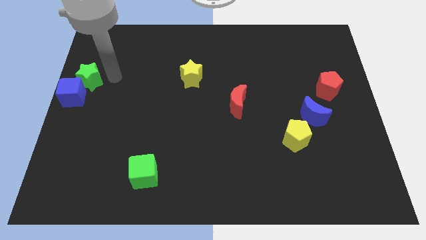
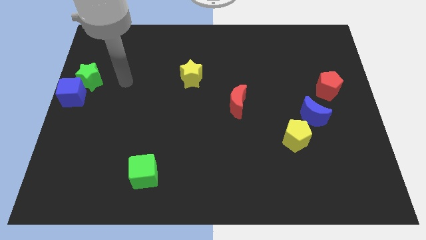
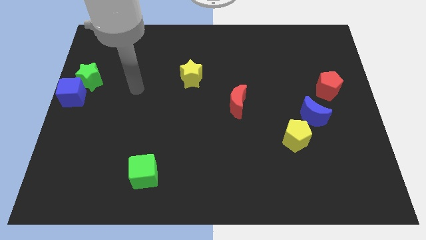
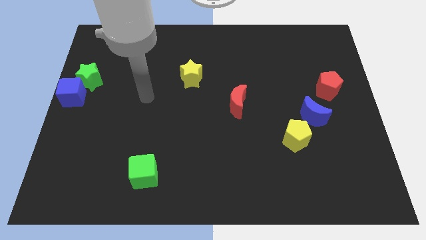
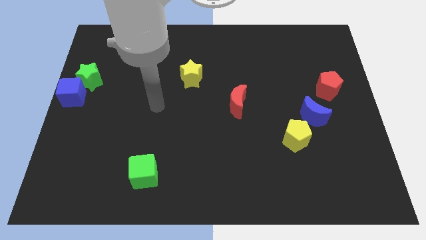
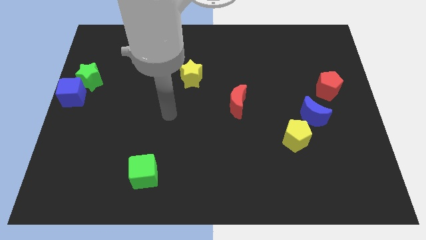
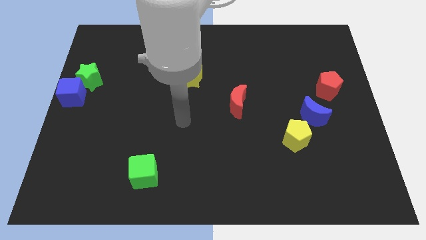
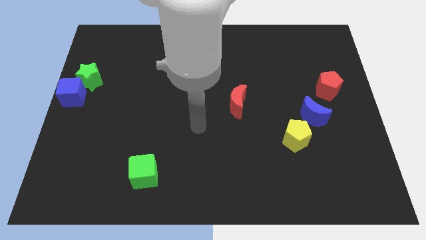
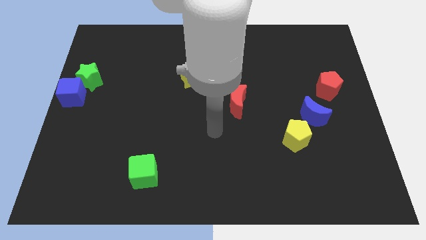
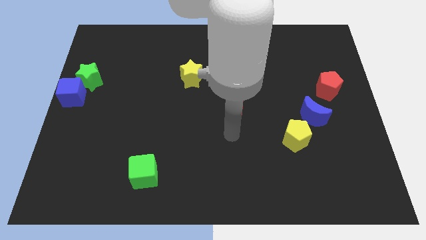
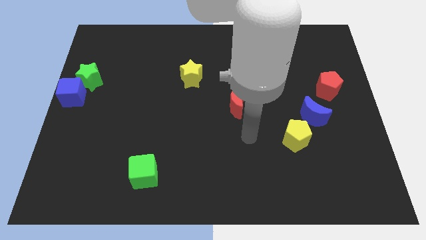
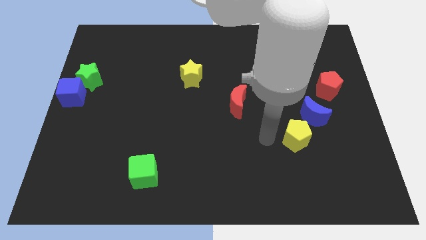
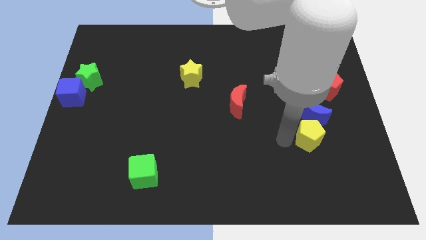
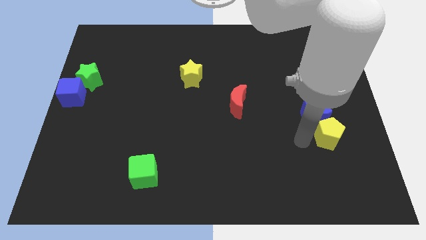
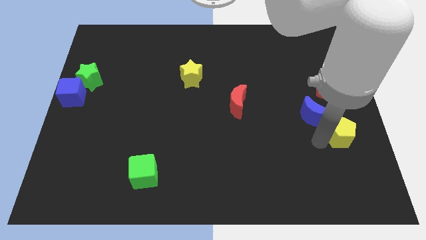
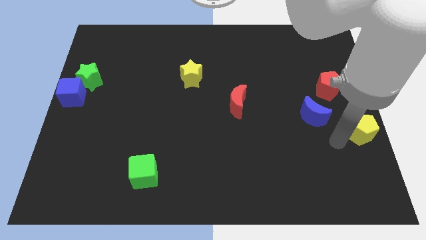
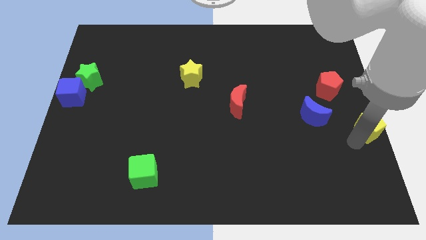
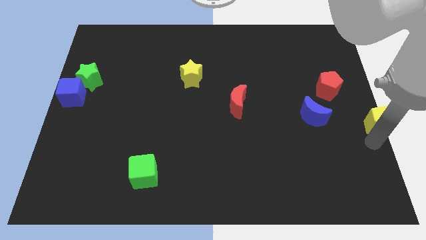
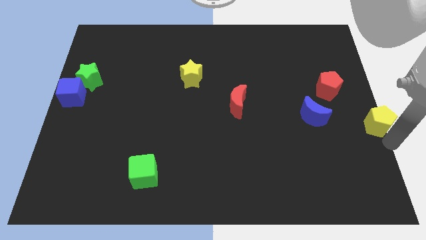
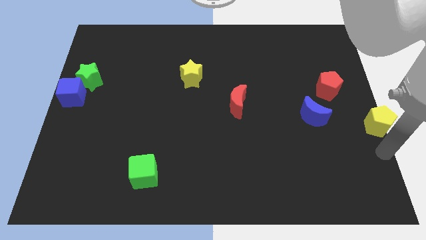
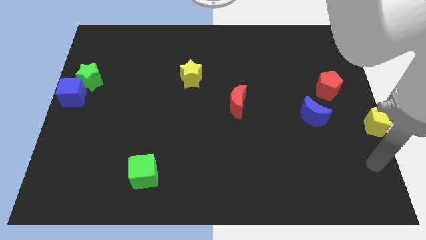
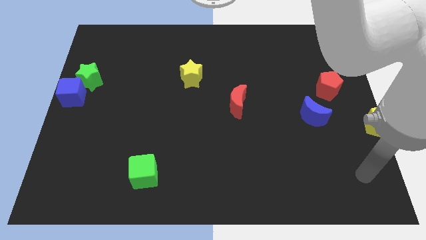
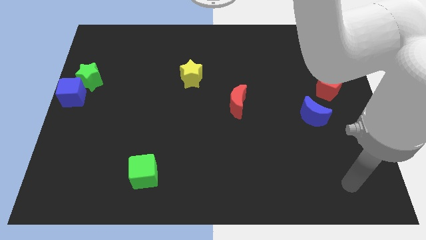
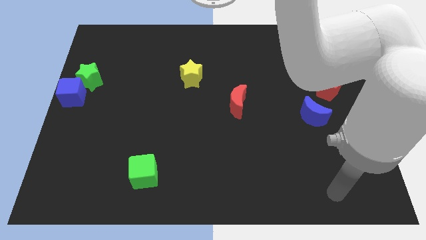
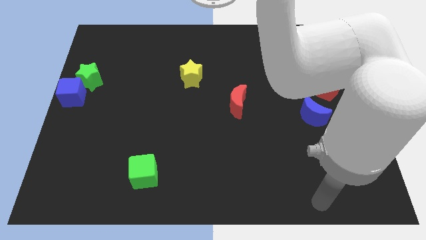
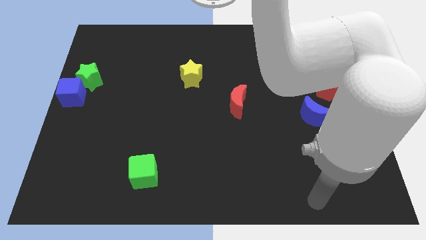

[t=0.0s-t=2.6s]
push the yellow pentagon to the center right

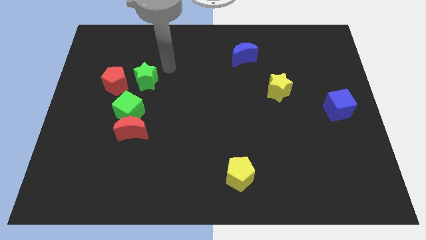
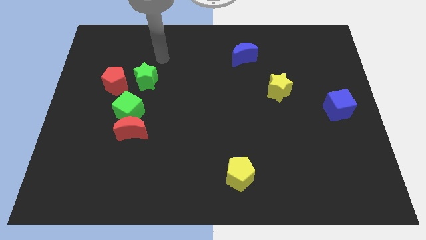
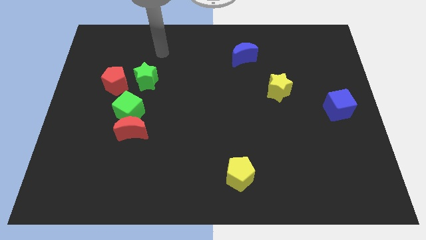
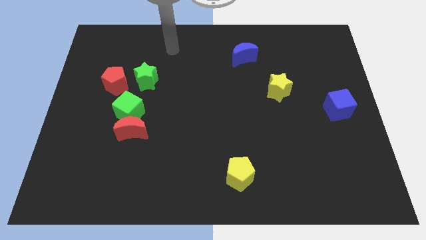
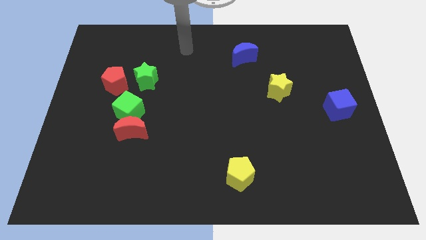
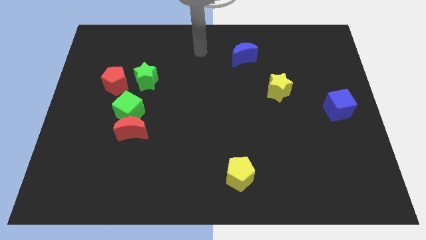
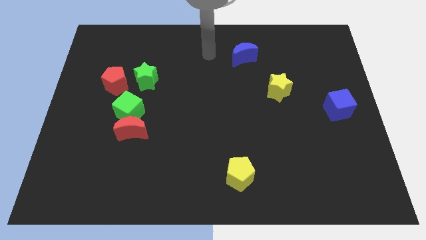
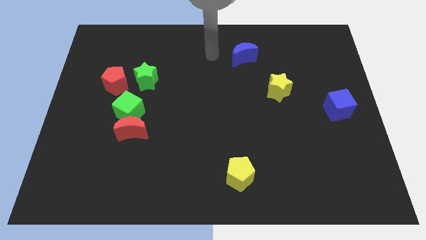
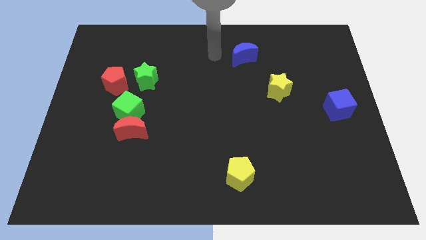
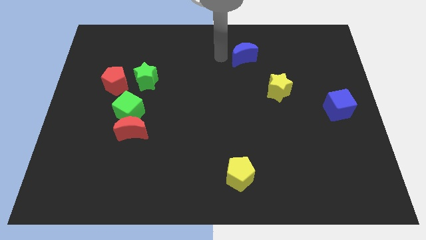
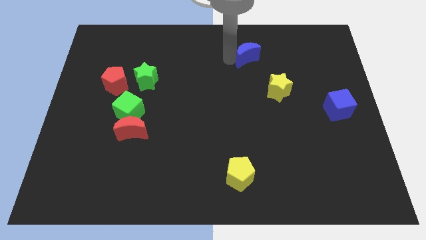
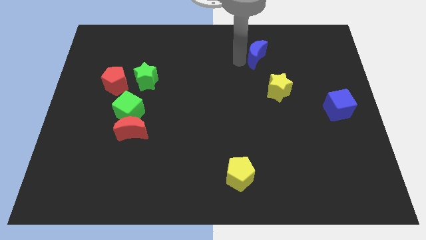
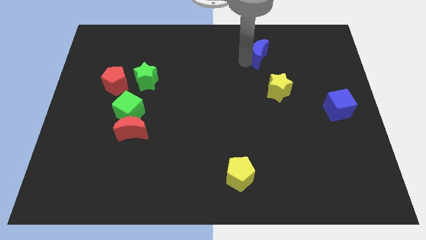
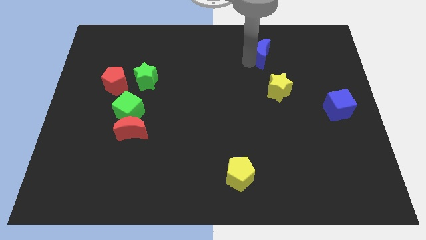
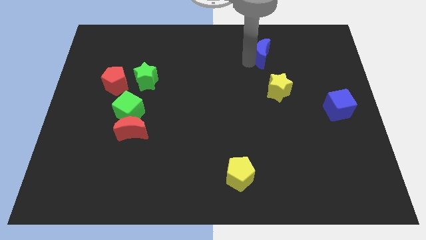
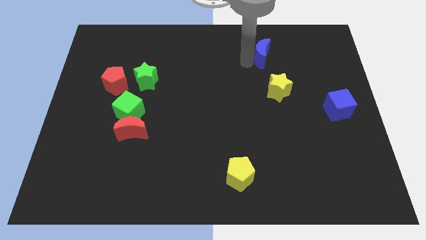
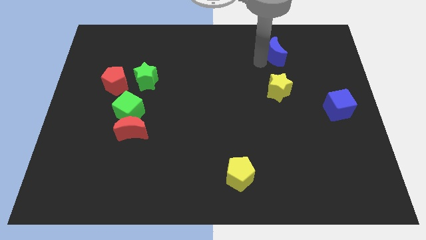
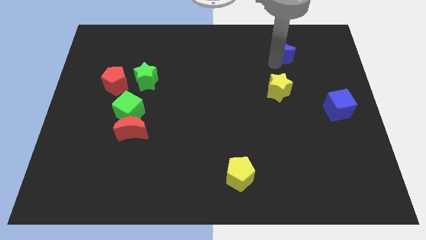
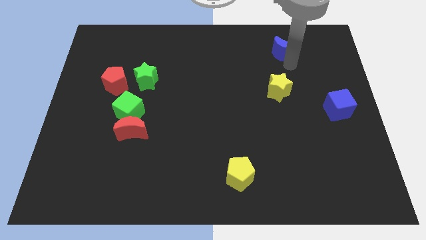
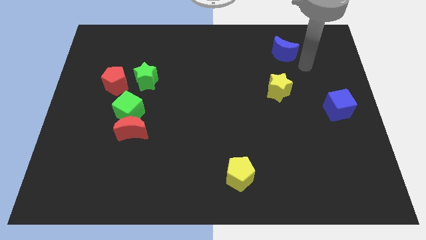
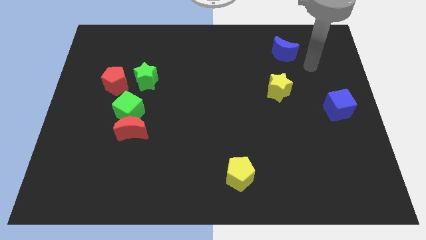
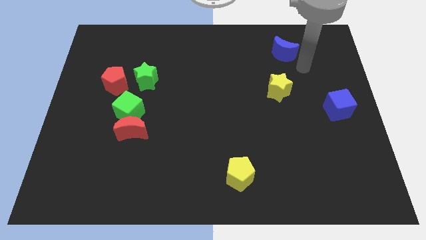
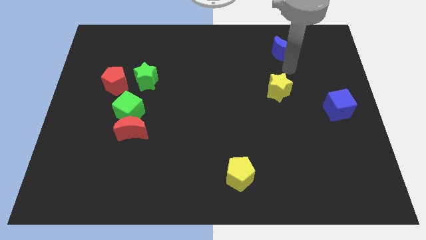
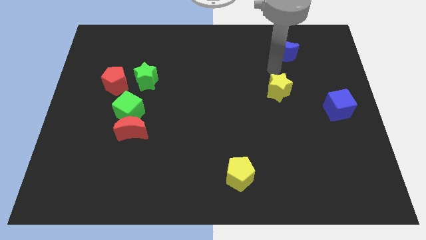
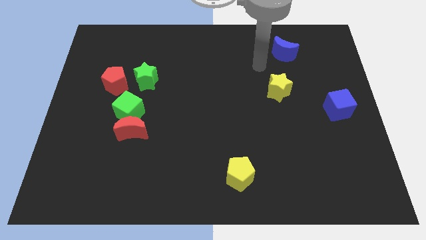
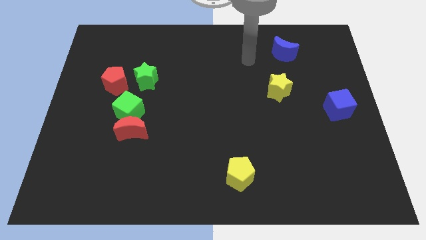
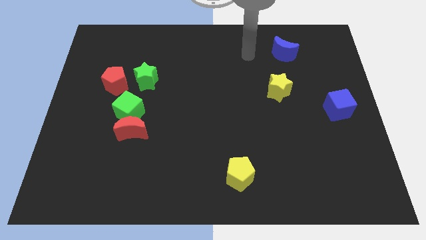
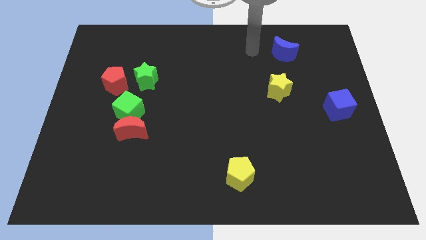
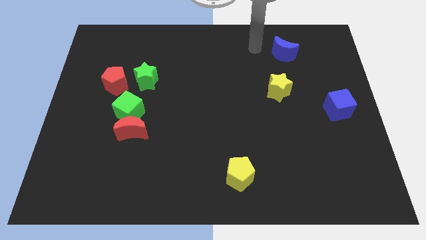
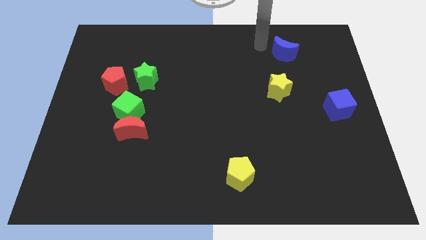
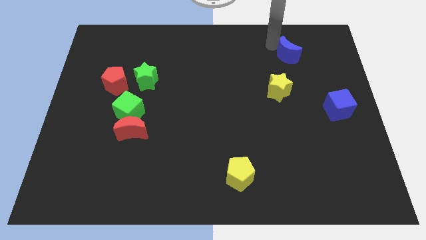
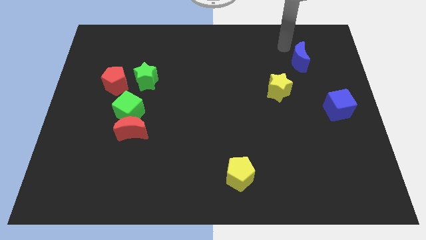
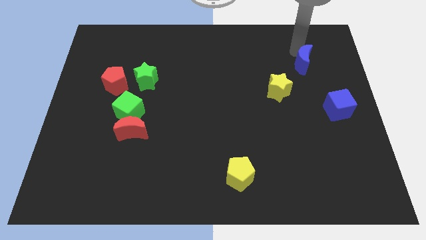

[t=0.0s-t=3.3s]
move the red crescent towards the right

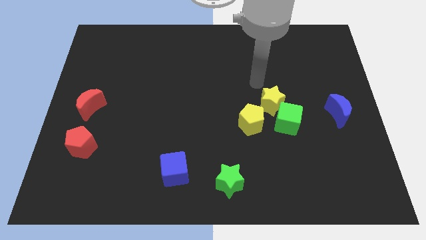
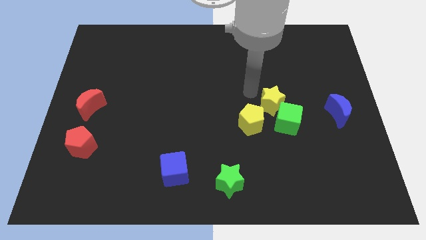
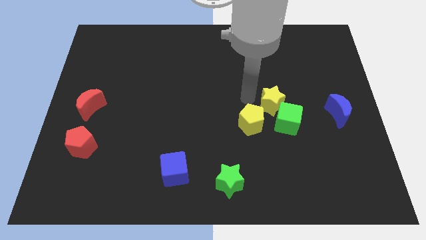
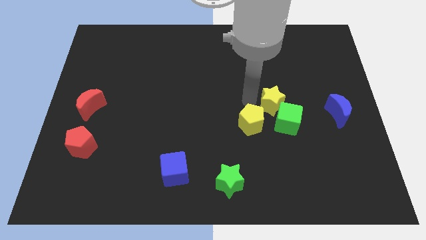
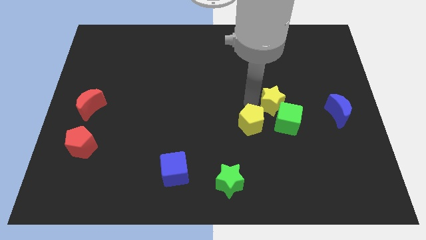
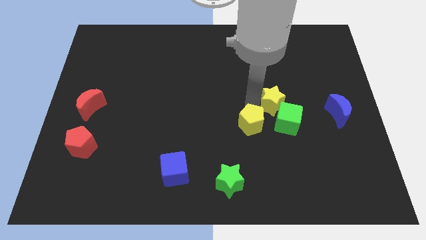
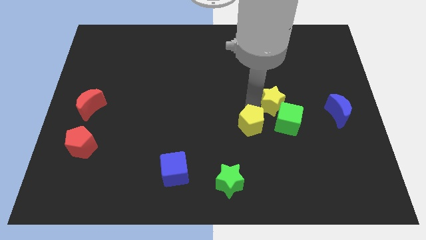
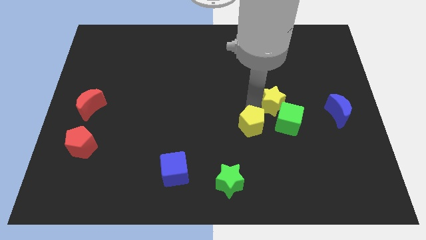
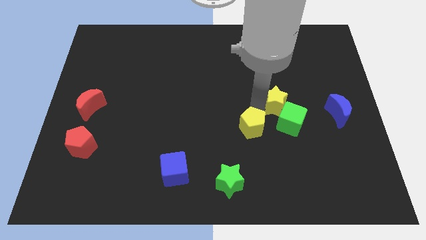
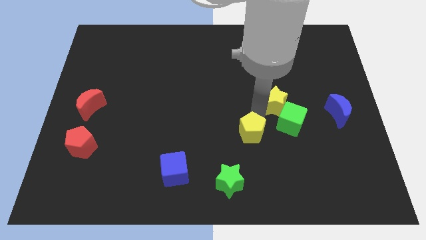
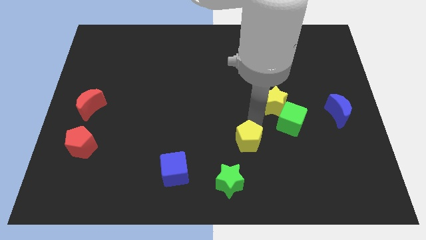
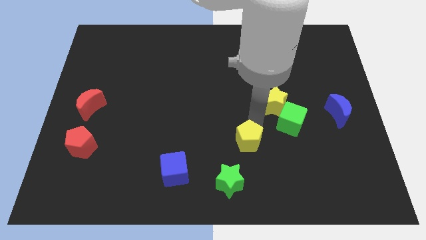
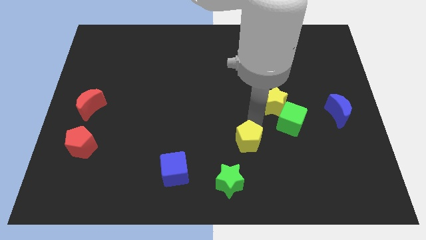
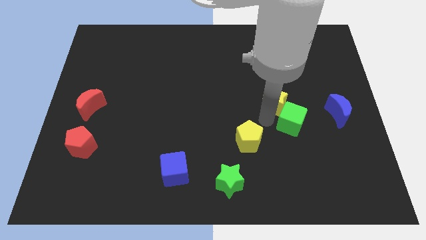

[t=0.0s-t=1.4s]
push yellow pentagon away from yellow star

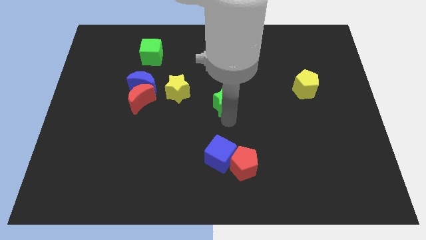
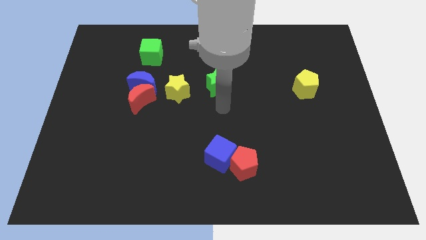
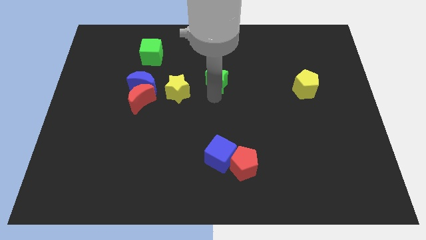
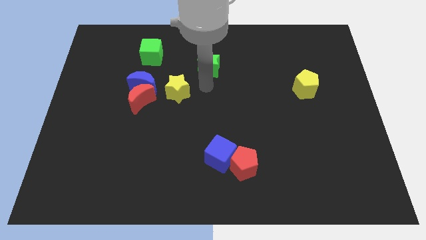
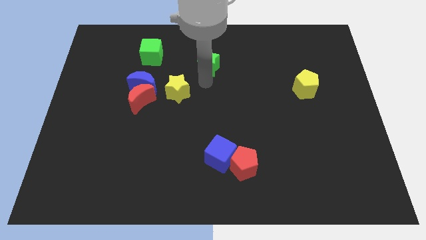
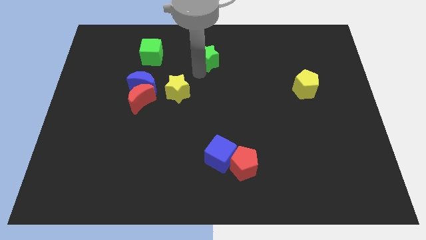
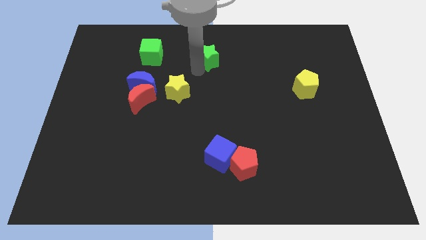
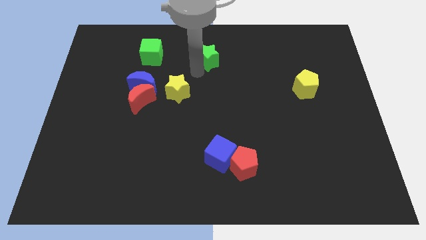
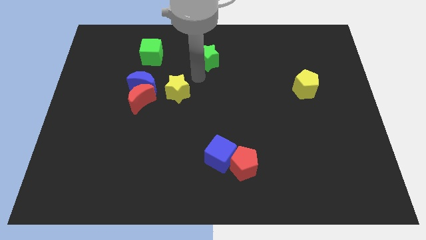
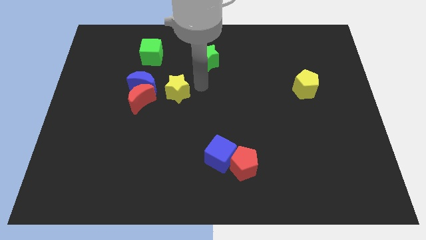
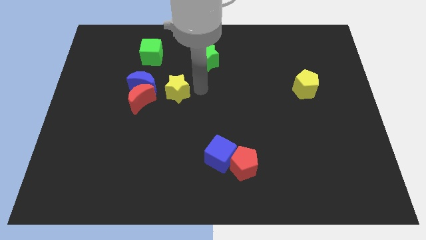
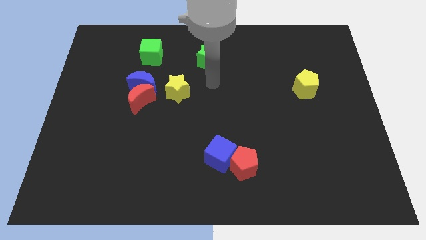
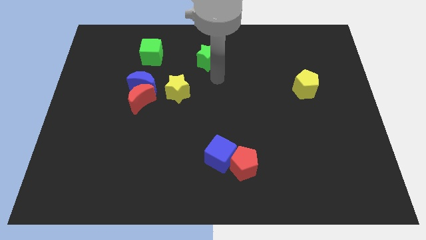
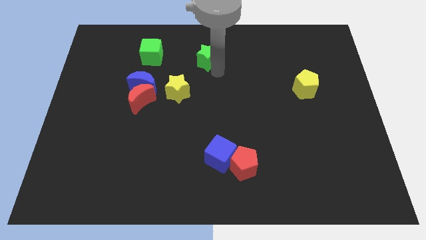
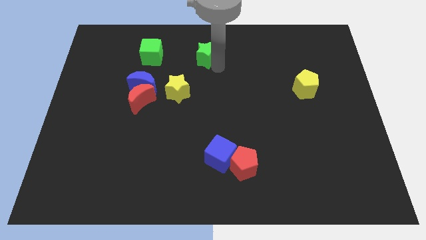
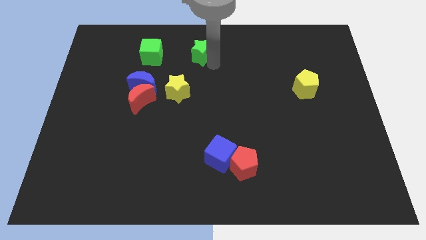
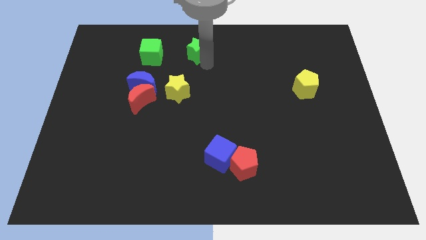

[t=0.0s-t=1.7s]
move the green star to the right of the green cube
